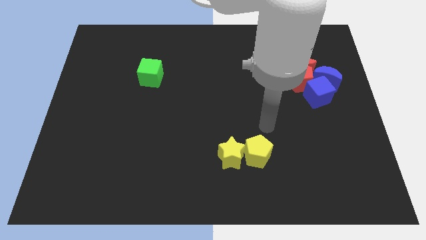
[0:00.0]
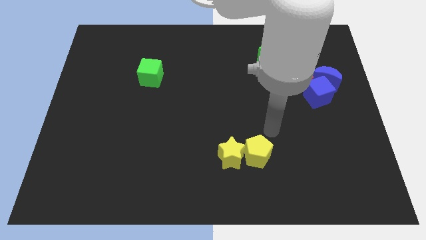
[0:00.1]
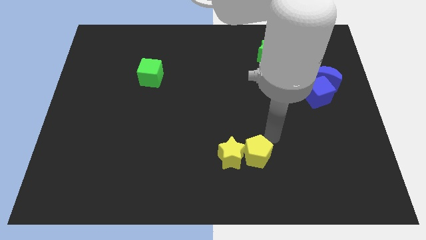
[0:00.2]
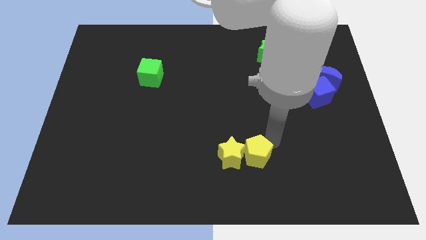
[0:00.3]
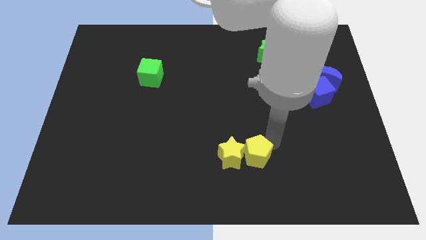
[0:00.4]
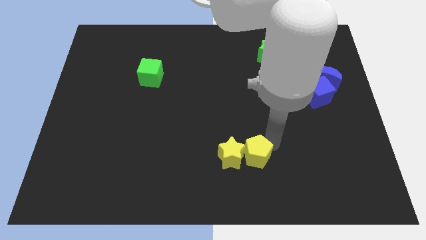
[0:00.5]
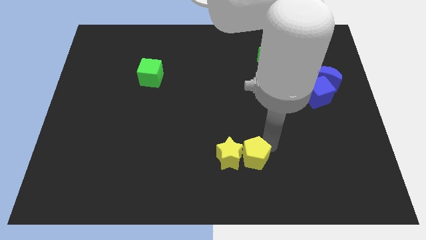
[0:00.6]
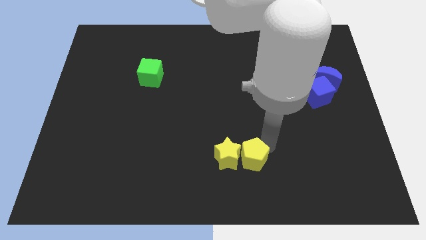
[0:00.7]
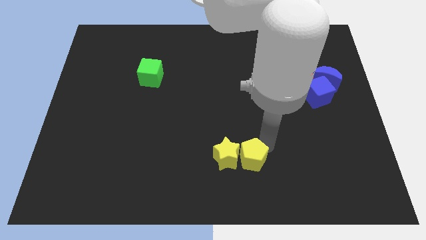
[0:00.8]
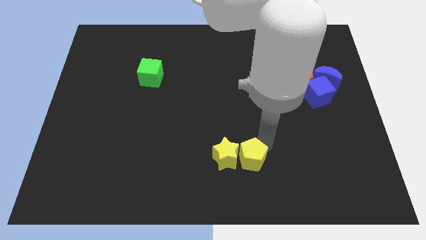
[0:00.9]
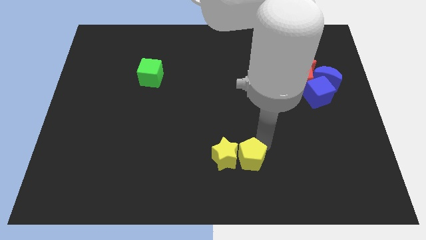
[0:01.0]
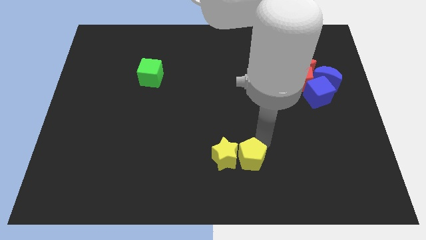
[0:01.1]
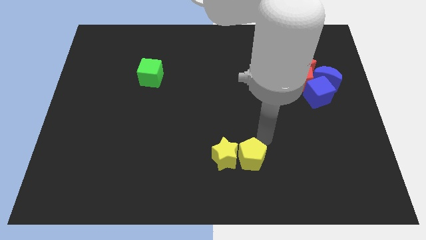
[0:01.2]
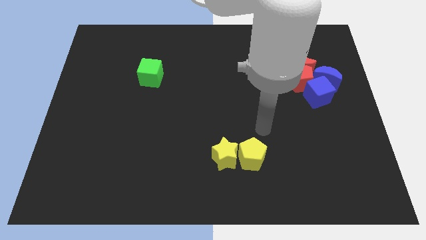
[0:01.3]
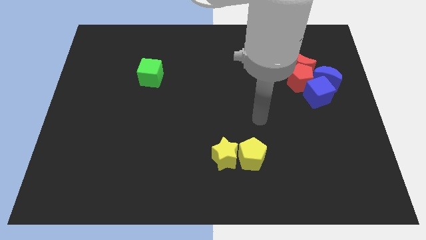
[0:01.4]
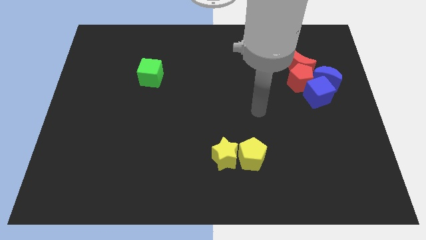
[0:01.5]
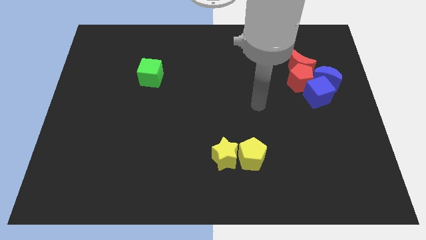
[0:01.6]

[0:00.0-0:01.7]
push yellow blocks slightly towards center

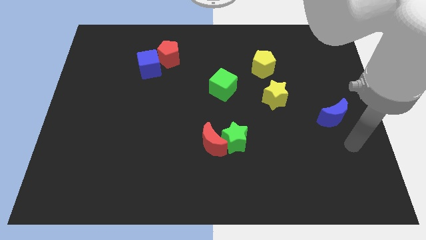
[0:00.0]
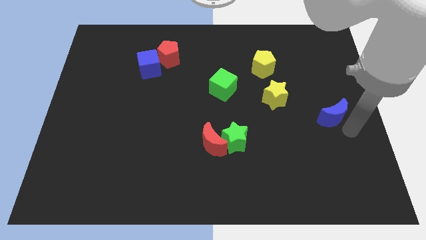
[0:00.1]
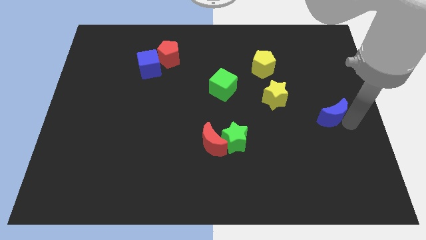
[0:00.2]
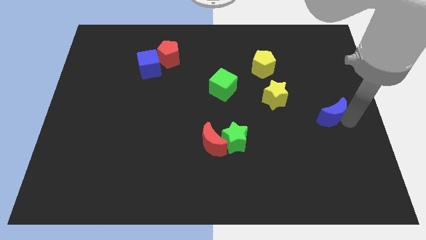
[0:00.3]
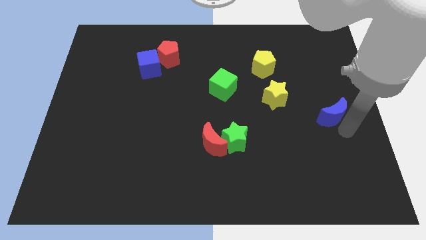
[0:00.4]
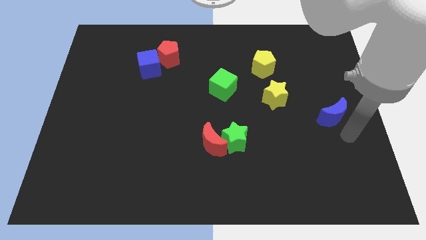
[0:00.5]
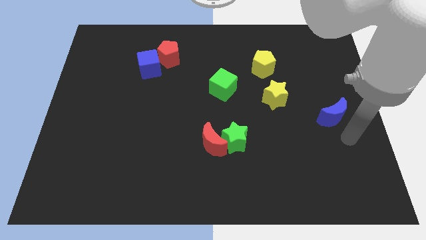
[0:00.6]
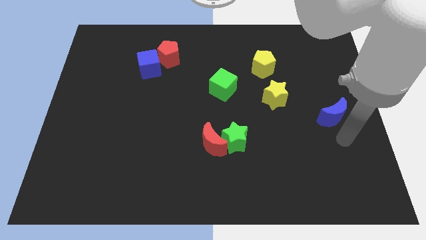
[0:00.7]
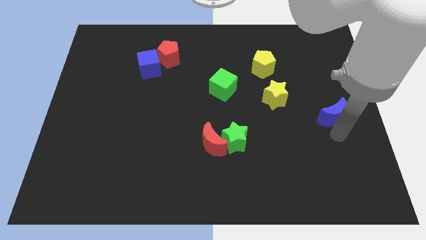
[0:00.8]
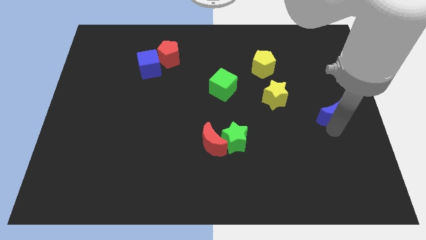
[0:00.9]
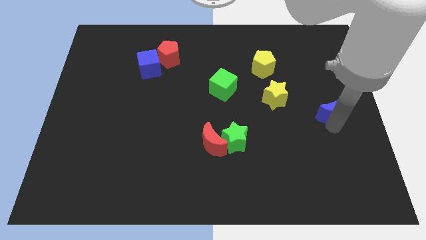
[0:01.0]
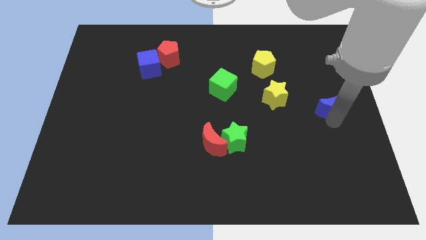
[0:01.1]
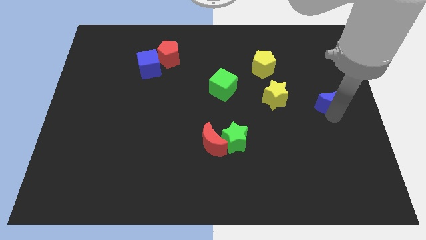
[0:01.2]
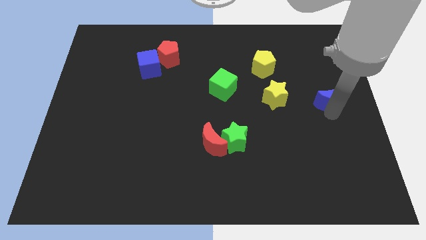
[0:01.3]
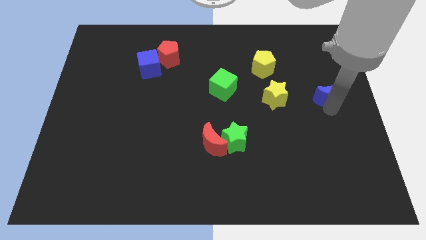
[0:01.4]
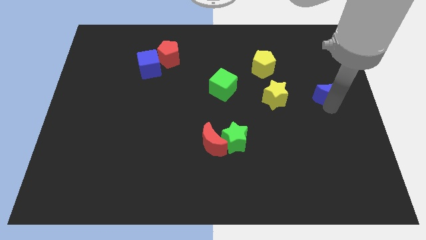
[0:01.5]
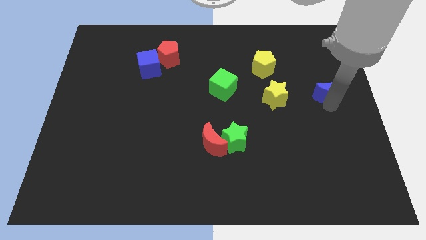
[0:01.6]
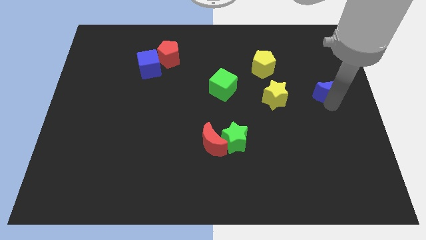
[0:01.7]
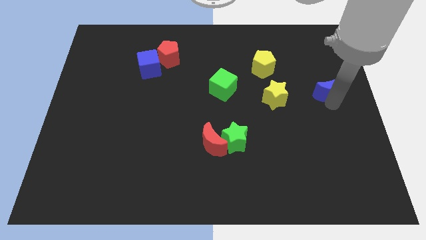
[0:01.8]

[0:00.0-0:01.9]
move the blue moon to the right of the yellow star

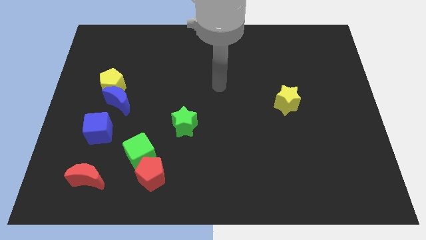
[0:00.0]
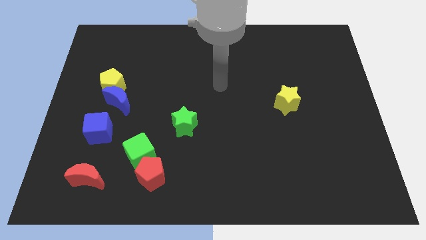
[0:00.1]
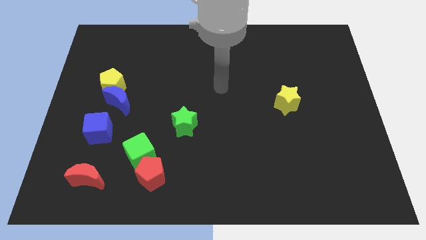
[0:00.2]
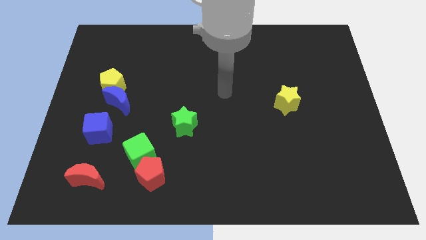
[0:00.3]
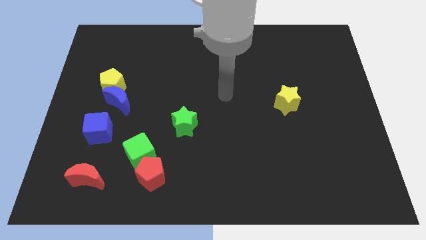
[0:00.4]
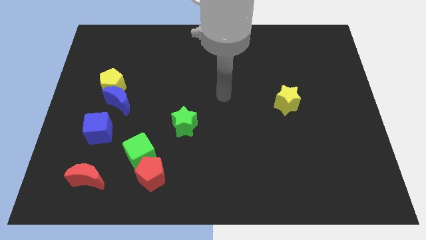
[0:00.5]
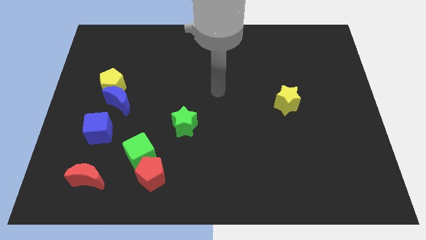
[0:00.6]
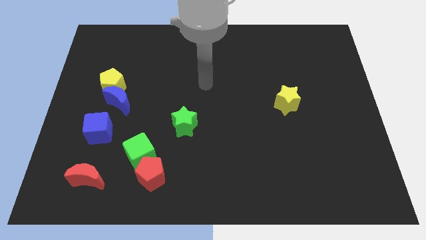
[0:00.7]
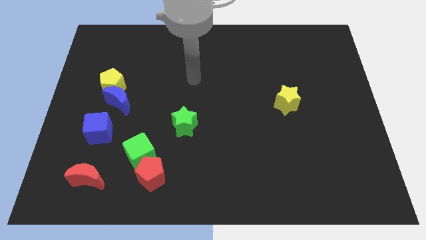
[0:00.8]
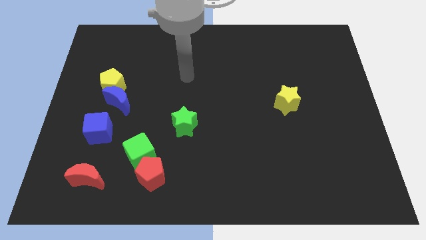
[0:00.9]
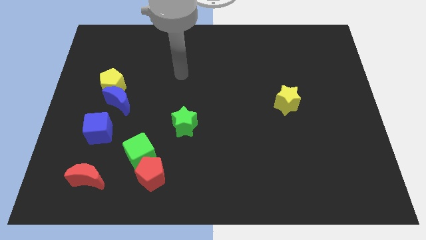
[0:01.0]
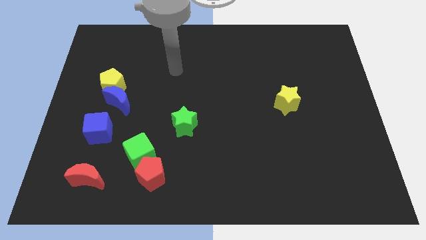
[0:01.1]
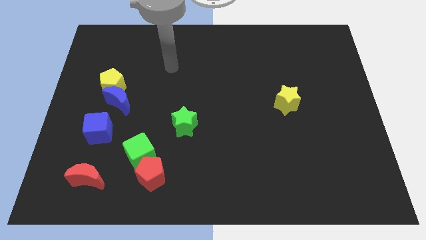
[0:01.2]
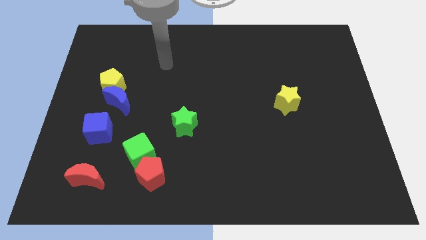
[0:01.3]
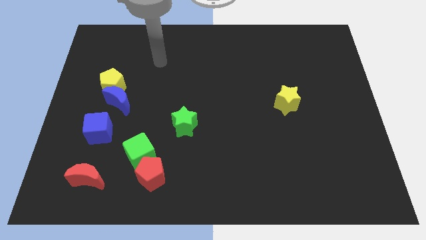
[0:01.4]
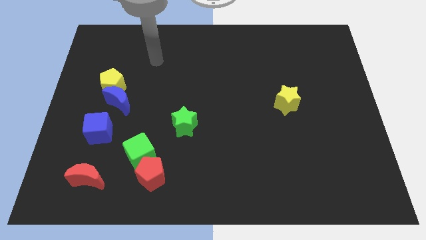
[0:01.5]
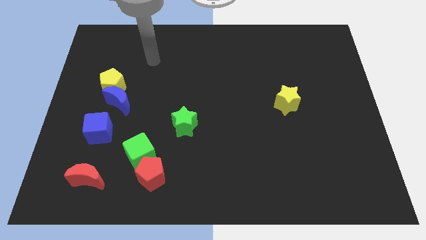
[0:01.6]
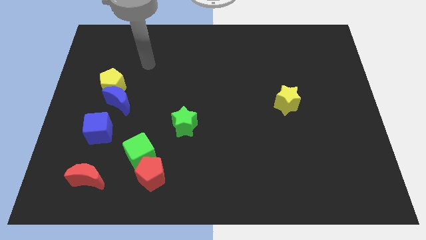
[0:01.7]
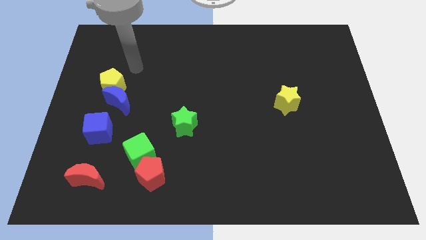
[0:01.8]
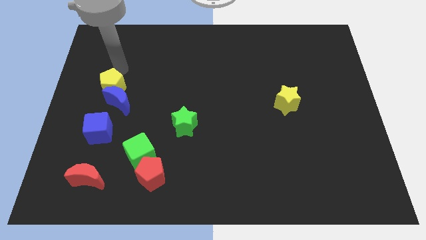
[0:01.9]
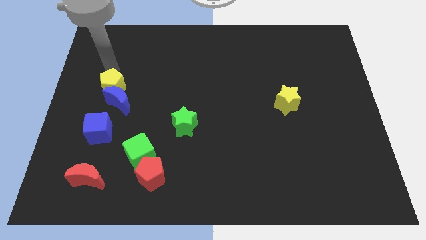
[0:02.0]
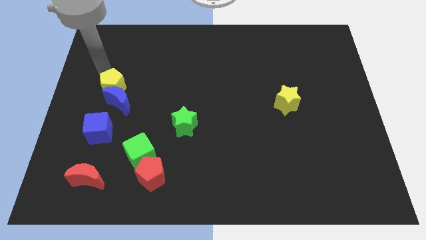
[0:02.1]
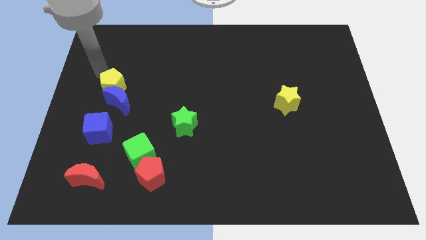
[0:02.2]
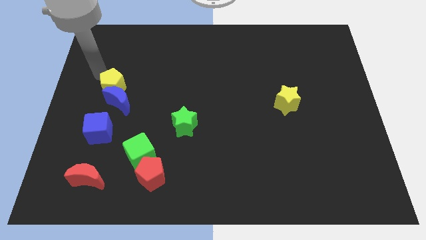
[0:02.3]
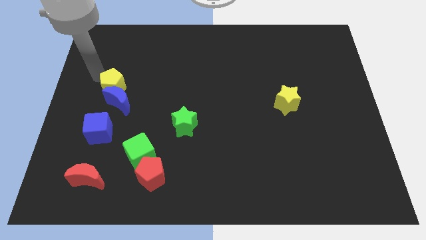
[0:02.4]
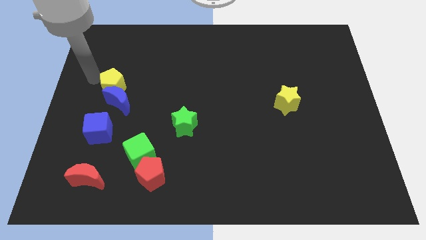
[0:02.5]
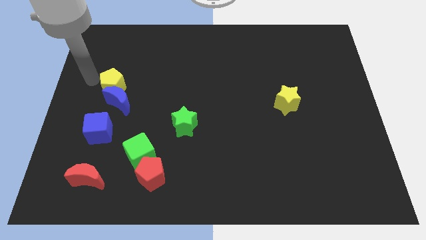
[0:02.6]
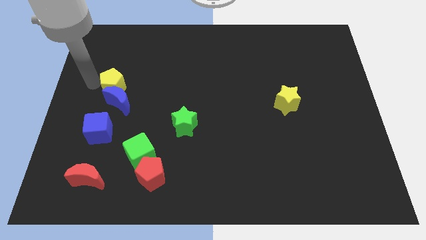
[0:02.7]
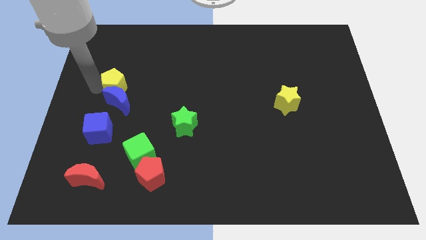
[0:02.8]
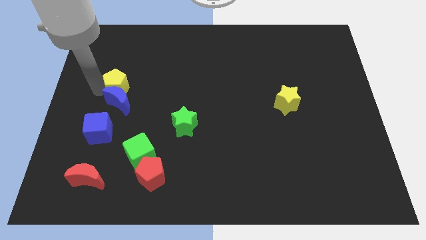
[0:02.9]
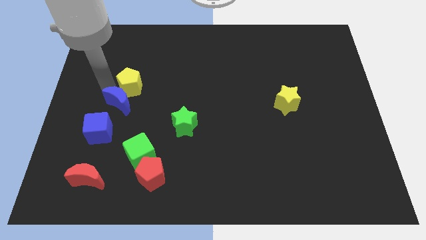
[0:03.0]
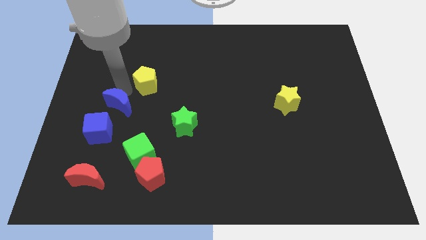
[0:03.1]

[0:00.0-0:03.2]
place yellow pentagon to the top right of the blue moon

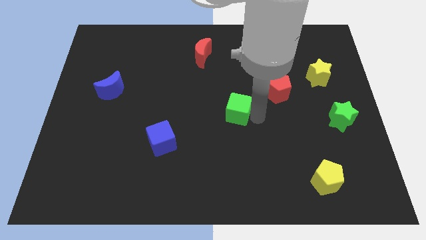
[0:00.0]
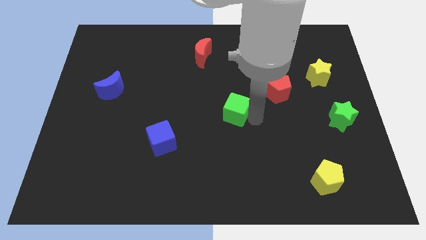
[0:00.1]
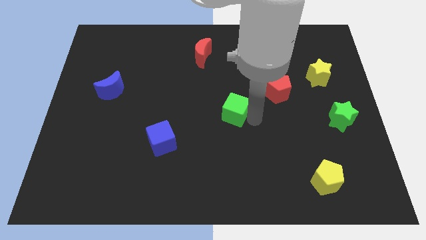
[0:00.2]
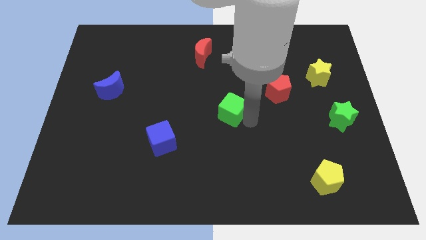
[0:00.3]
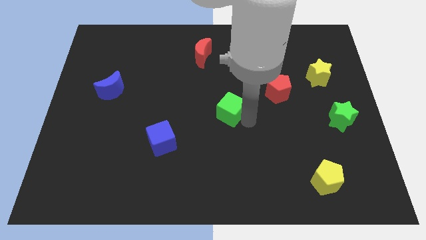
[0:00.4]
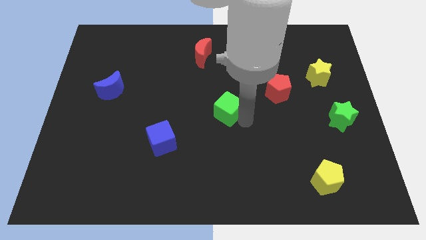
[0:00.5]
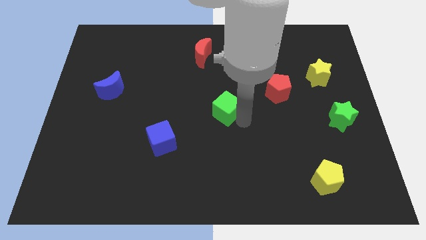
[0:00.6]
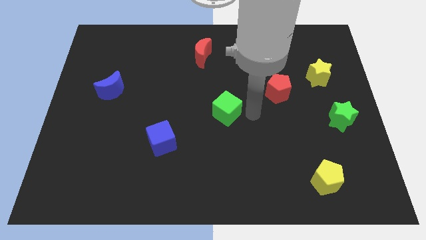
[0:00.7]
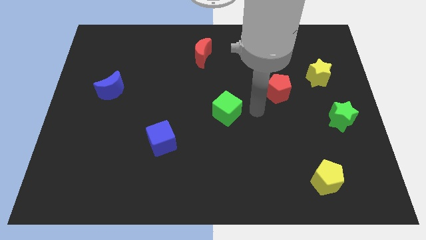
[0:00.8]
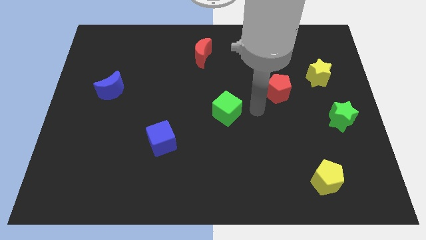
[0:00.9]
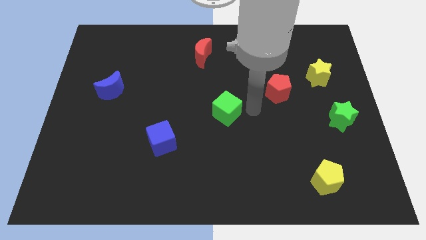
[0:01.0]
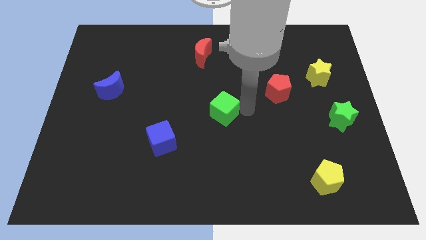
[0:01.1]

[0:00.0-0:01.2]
place the green cube to the center

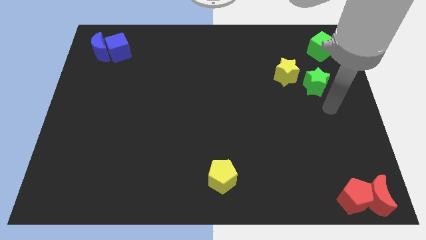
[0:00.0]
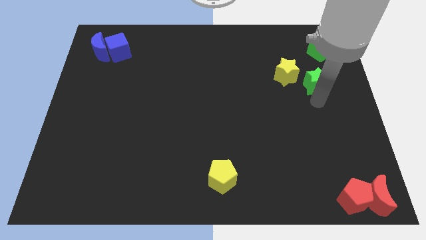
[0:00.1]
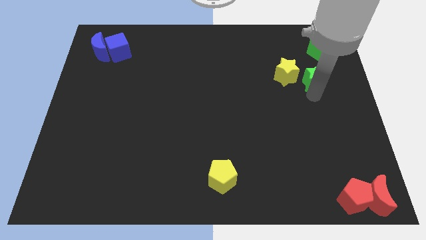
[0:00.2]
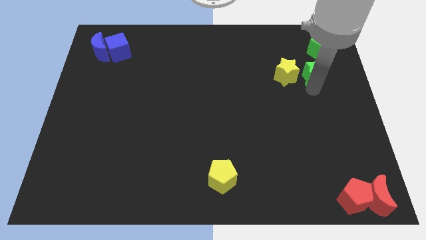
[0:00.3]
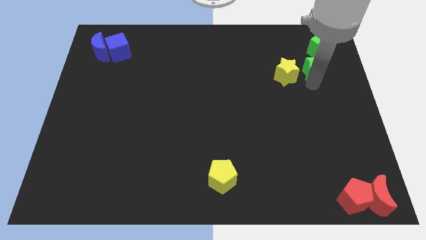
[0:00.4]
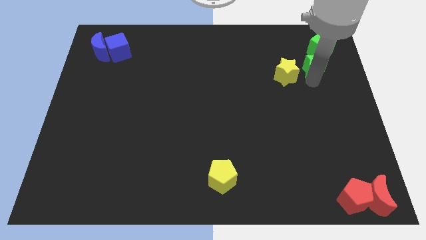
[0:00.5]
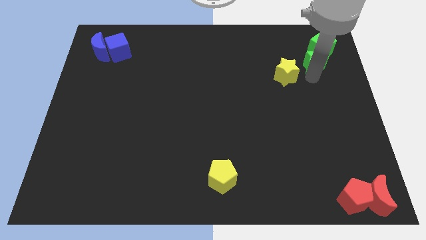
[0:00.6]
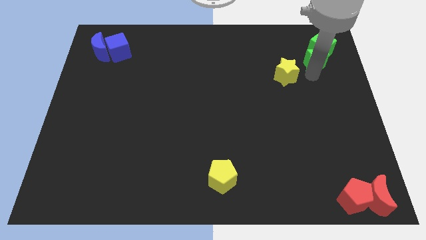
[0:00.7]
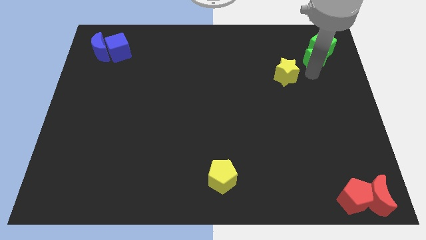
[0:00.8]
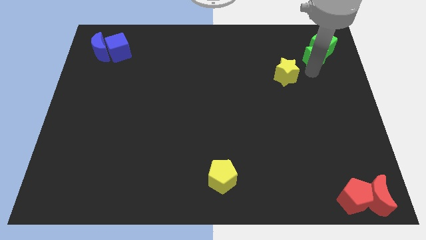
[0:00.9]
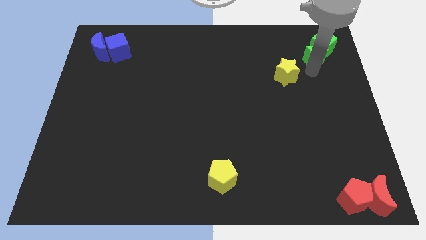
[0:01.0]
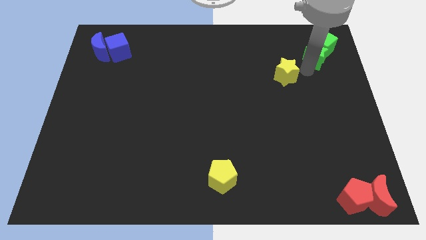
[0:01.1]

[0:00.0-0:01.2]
push the green star towards the green cube
